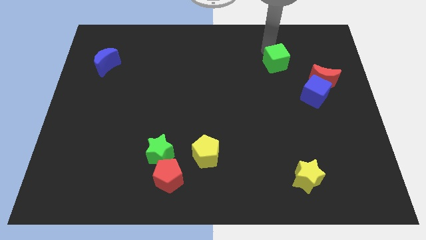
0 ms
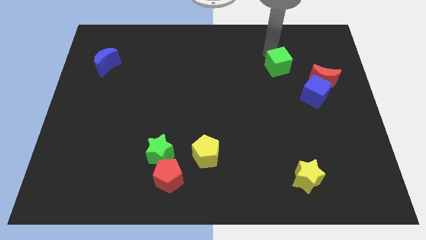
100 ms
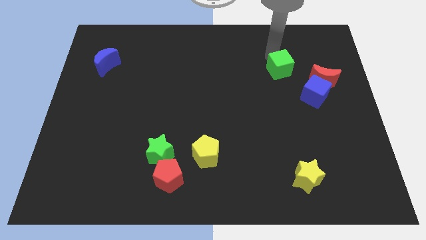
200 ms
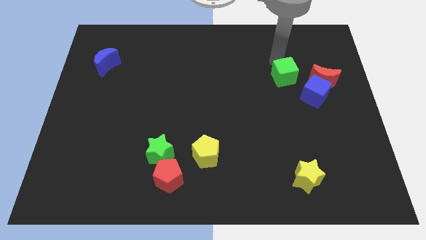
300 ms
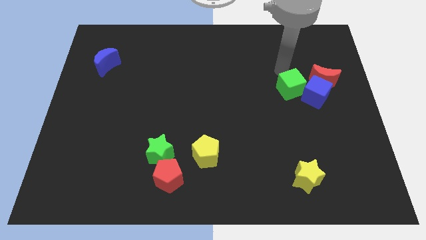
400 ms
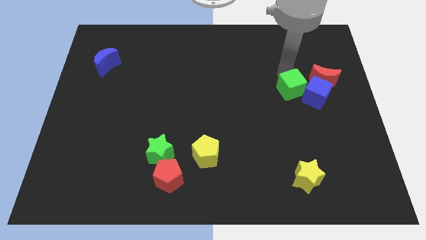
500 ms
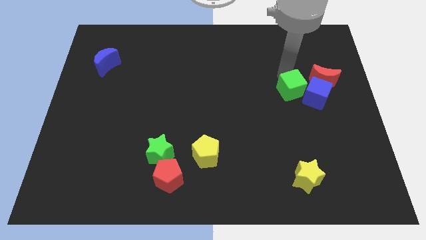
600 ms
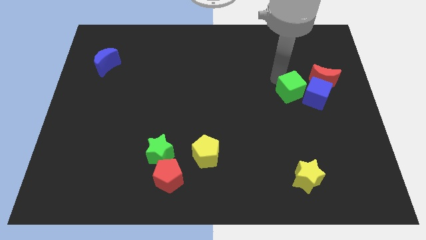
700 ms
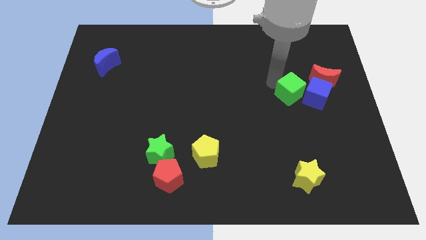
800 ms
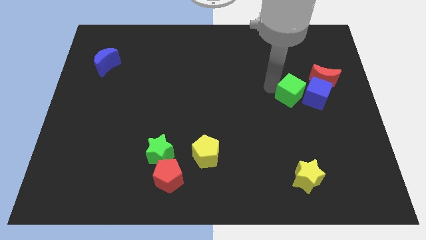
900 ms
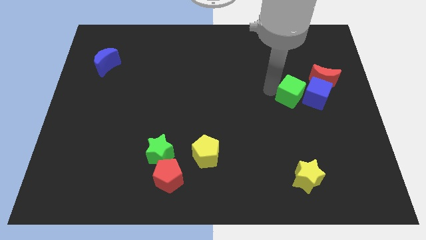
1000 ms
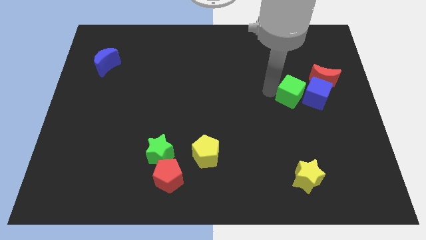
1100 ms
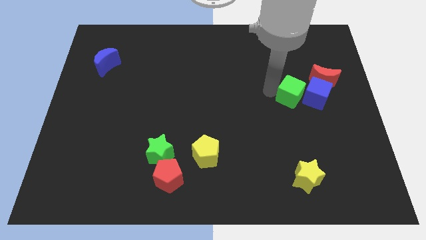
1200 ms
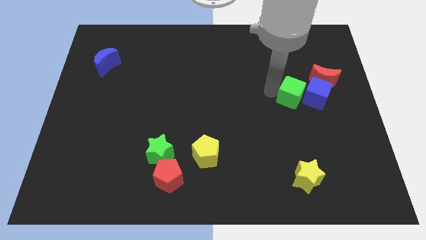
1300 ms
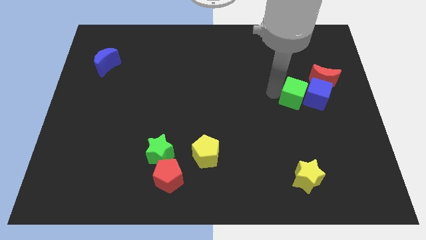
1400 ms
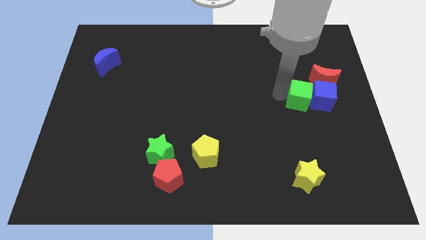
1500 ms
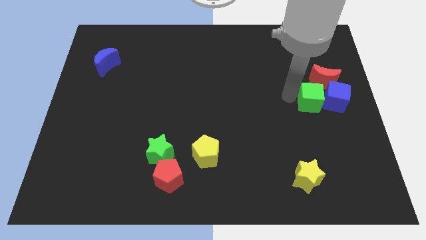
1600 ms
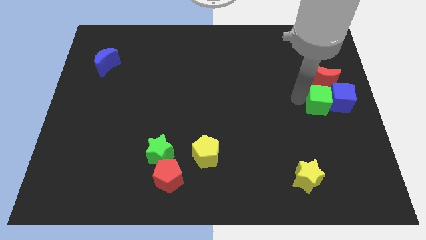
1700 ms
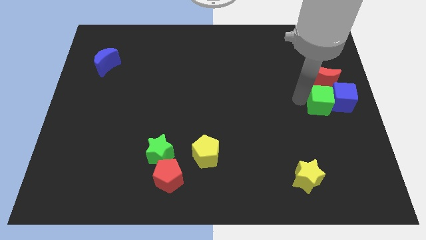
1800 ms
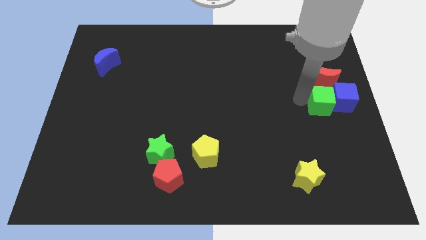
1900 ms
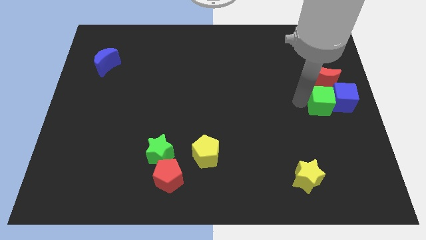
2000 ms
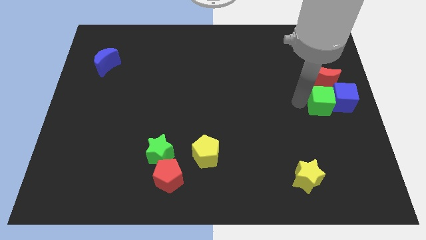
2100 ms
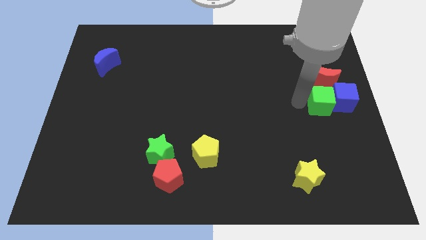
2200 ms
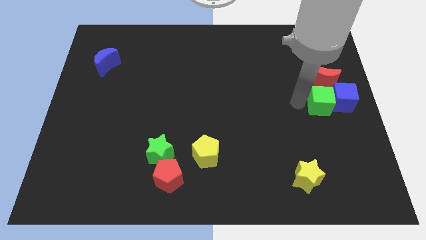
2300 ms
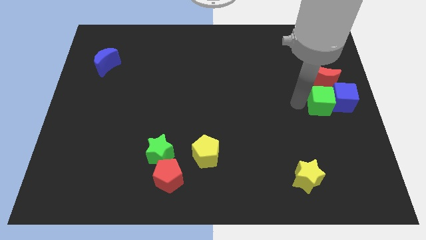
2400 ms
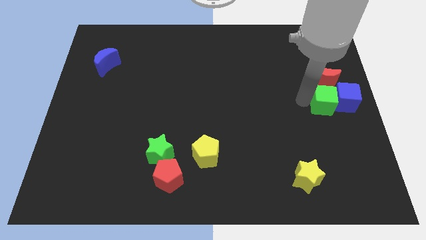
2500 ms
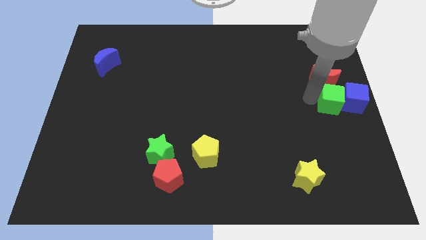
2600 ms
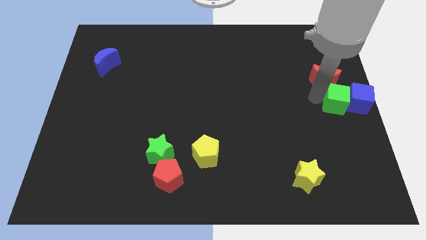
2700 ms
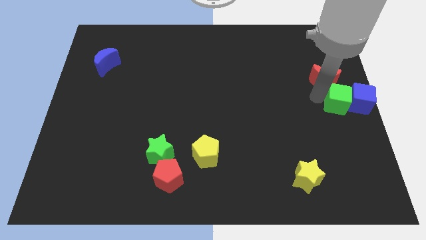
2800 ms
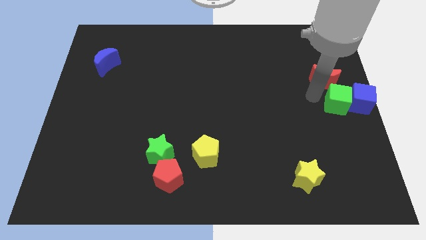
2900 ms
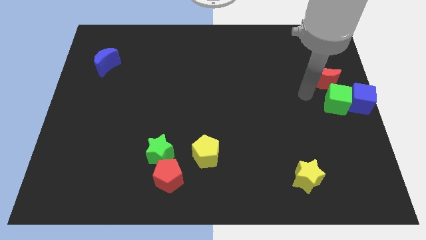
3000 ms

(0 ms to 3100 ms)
move green cube and blue cube at center right of board

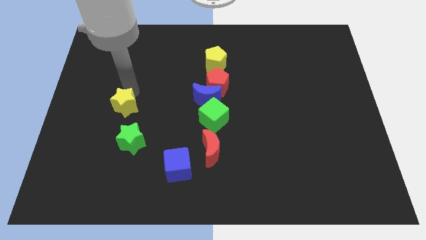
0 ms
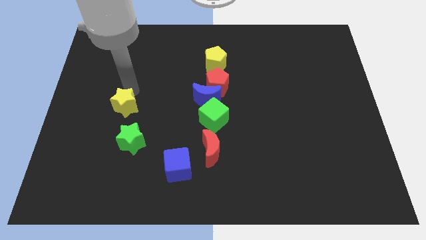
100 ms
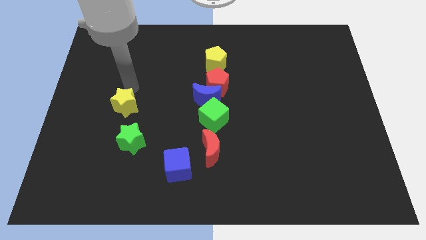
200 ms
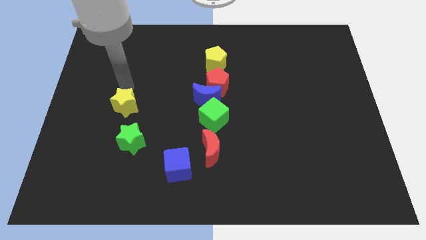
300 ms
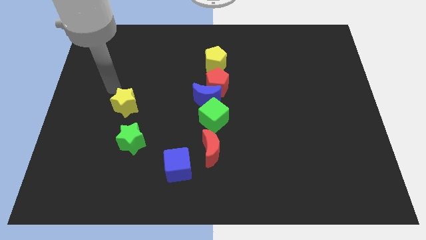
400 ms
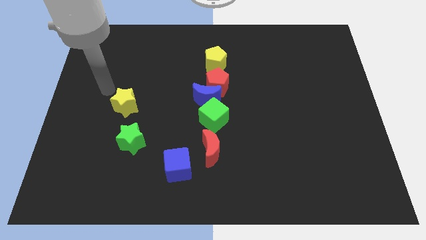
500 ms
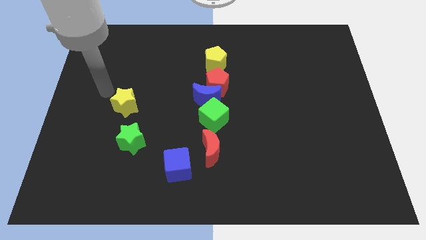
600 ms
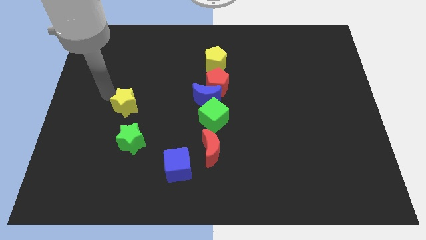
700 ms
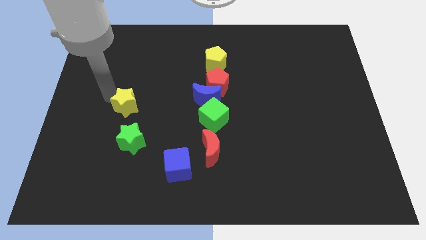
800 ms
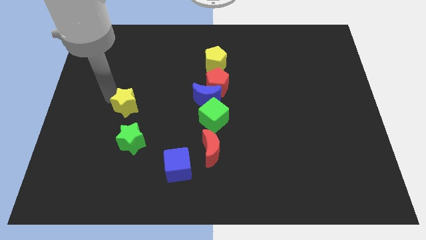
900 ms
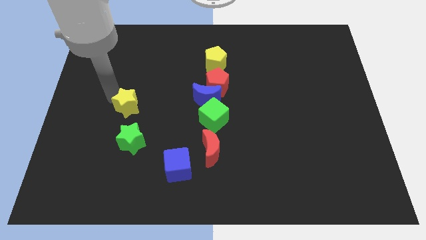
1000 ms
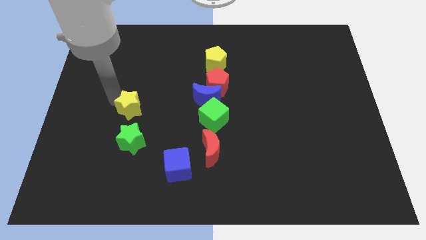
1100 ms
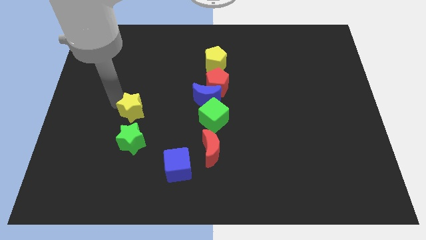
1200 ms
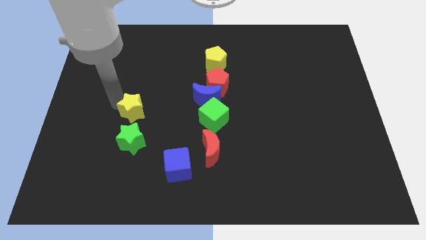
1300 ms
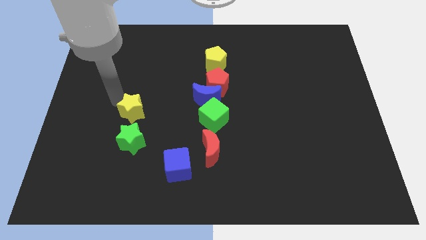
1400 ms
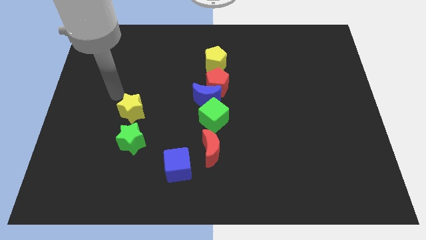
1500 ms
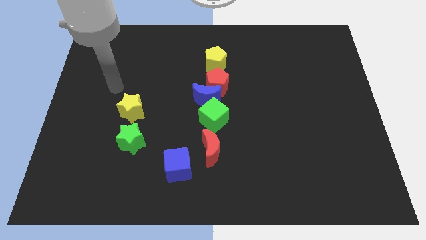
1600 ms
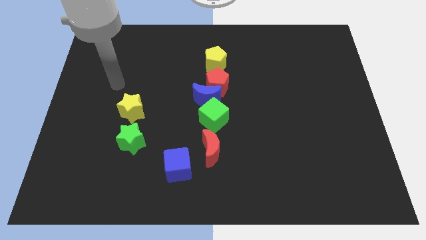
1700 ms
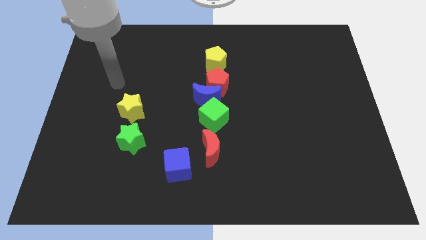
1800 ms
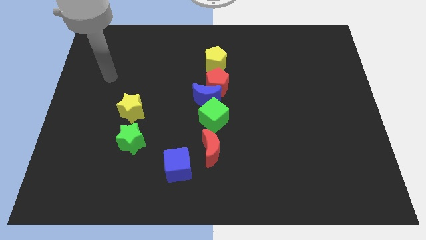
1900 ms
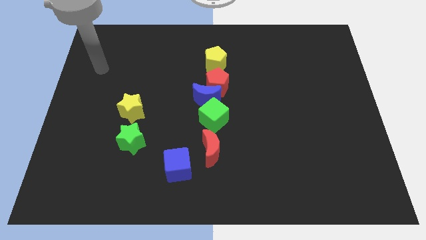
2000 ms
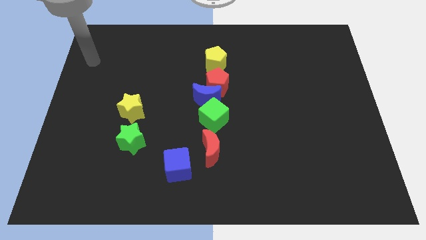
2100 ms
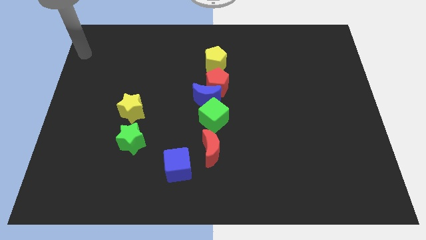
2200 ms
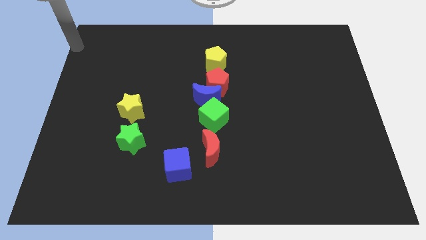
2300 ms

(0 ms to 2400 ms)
push yellow star close to the green star

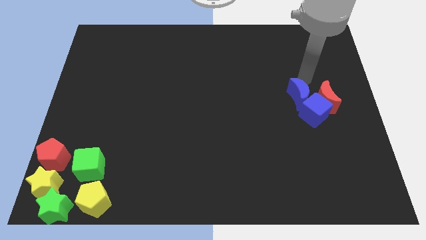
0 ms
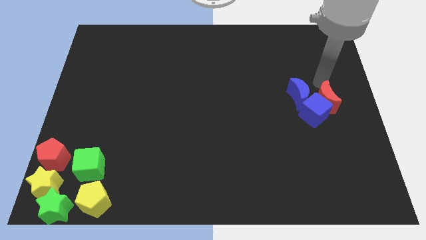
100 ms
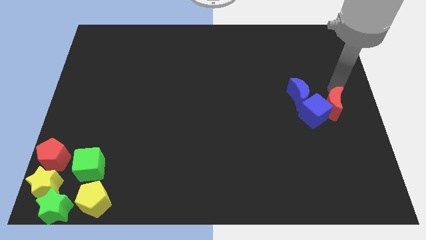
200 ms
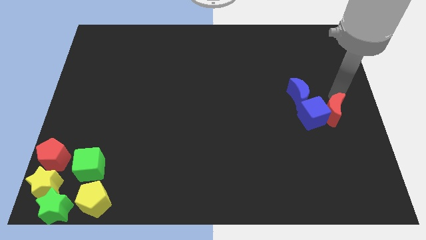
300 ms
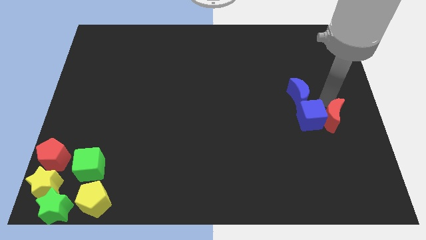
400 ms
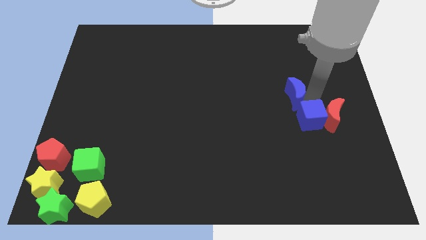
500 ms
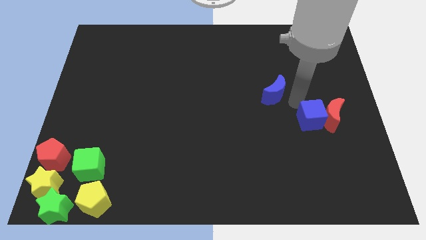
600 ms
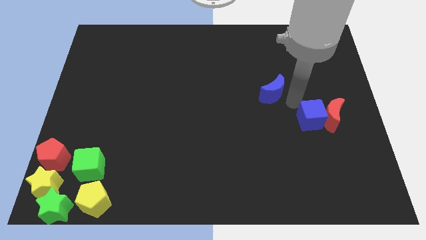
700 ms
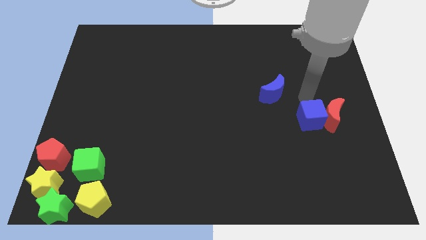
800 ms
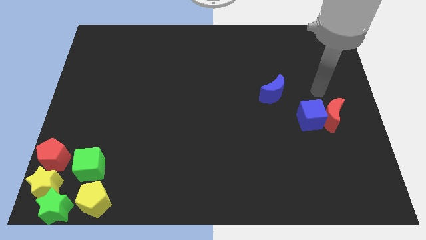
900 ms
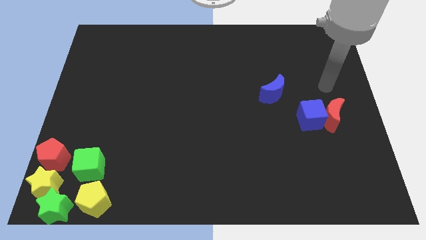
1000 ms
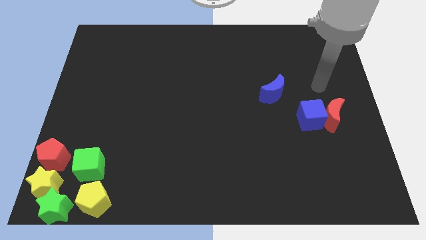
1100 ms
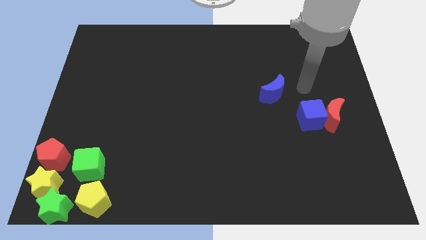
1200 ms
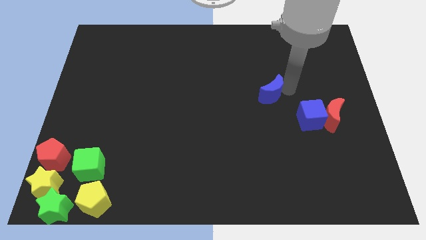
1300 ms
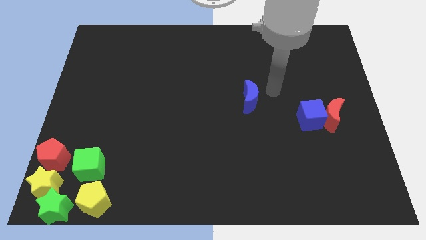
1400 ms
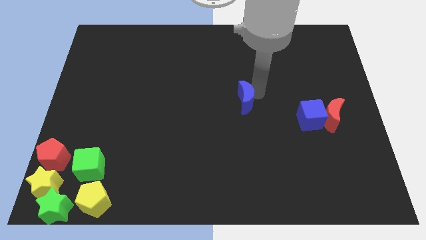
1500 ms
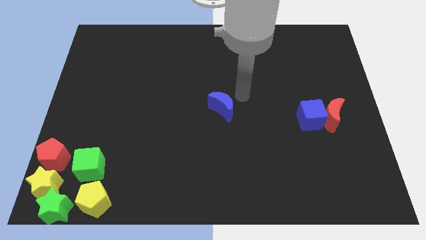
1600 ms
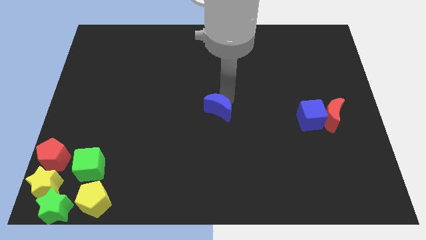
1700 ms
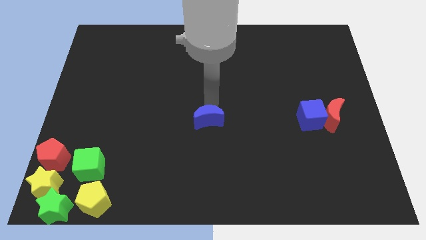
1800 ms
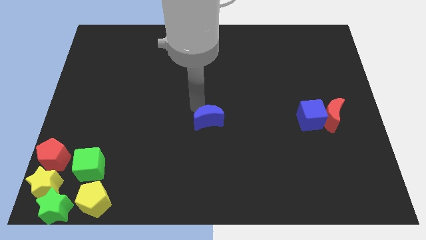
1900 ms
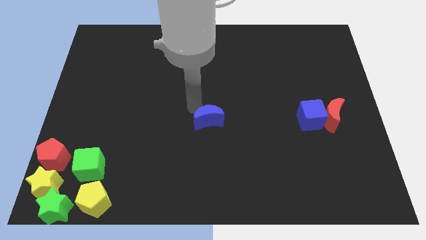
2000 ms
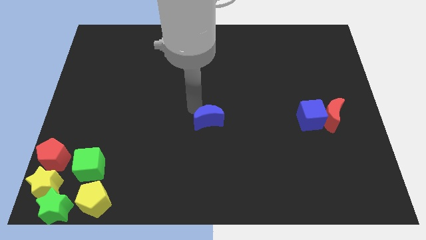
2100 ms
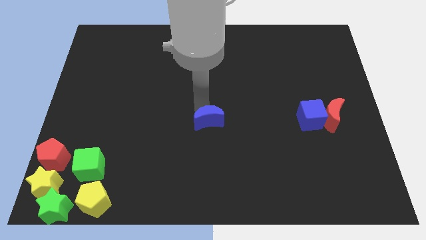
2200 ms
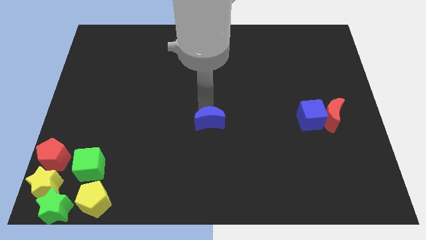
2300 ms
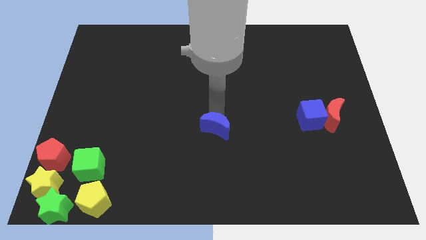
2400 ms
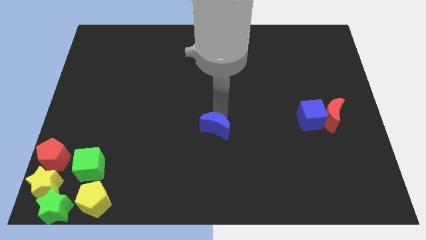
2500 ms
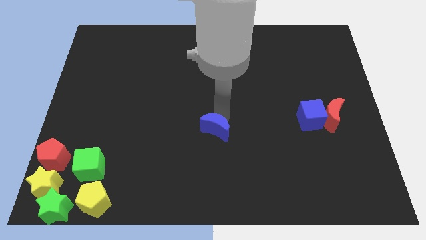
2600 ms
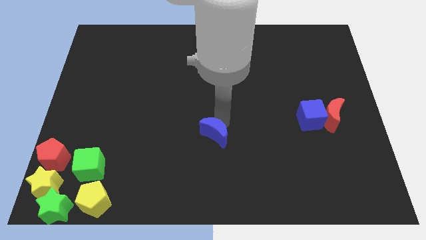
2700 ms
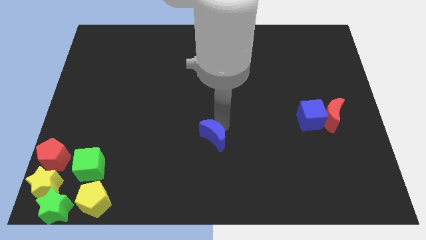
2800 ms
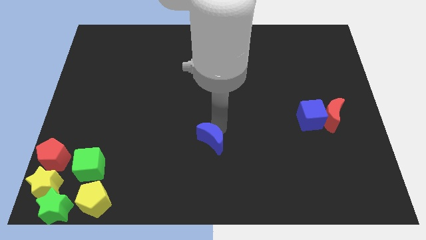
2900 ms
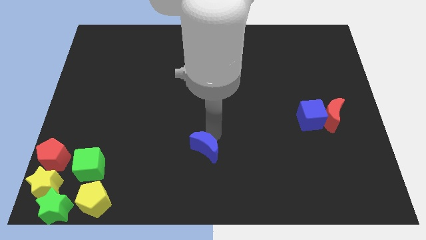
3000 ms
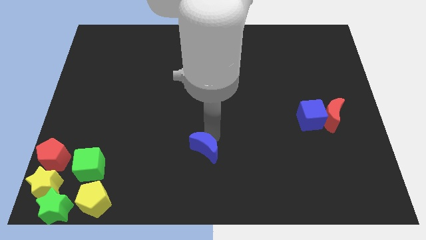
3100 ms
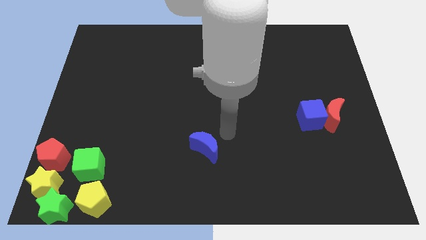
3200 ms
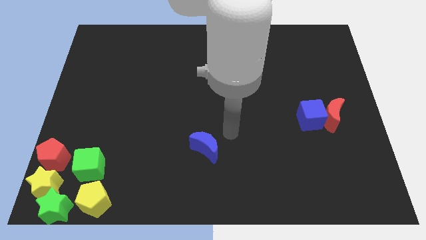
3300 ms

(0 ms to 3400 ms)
move the blue crescent diagonally on the bottom left side of the blue cube

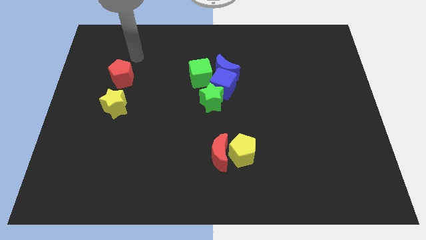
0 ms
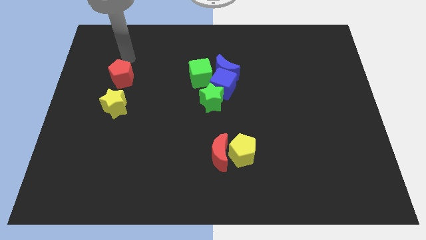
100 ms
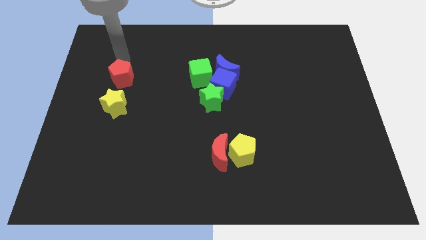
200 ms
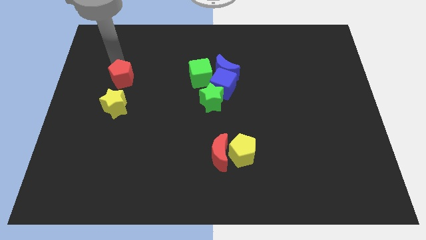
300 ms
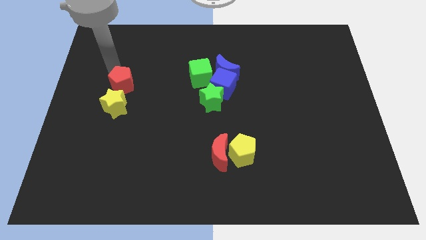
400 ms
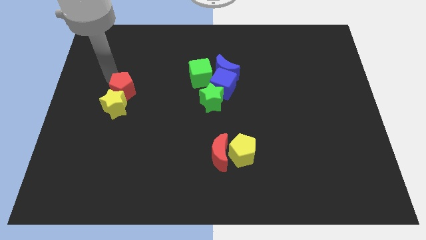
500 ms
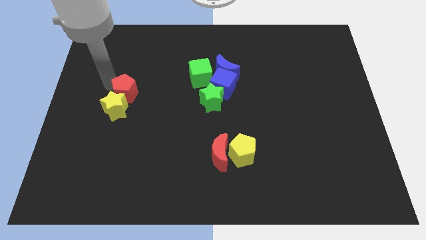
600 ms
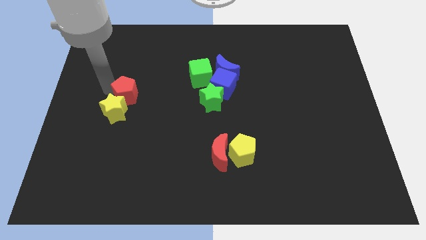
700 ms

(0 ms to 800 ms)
move the red pentagon into the yellow star
